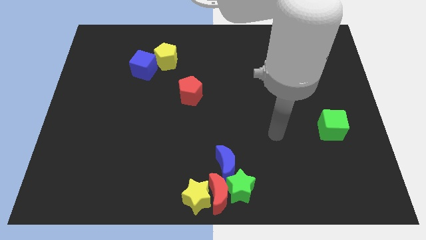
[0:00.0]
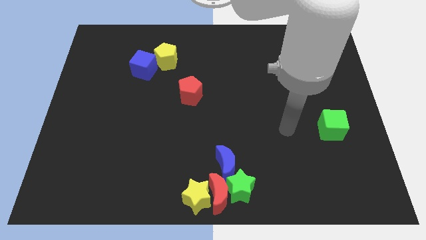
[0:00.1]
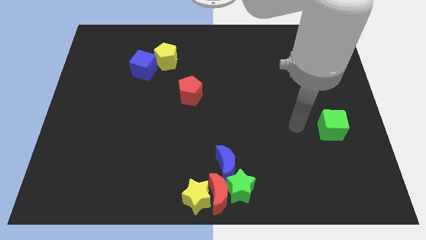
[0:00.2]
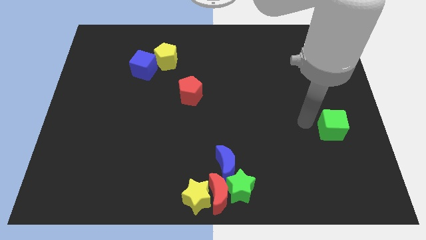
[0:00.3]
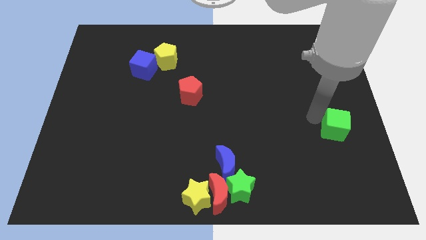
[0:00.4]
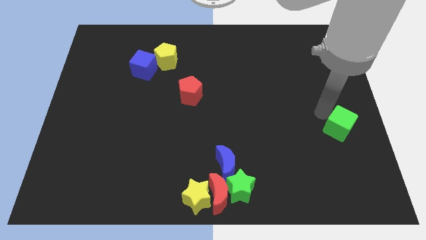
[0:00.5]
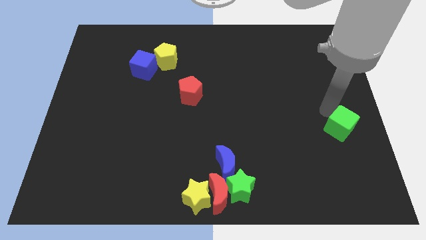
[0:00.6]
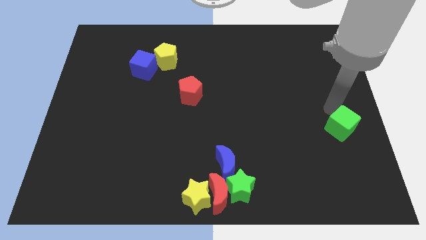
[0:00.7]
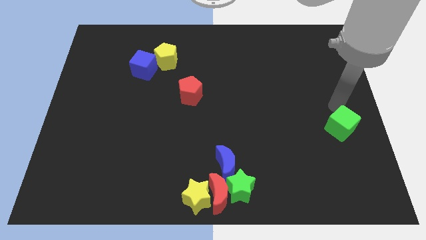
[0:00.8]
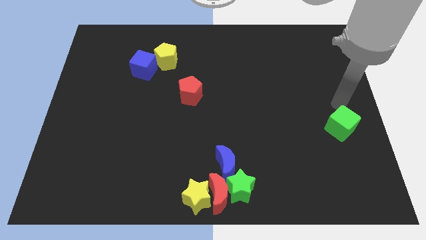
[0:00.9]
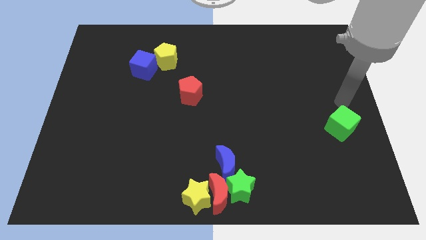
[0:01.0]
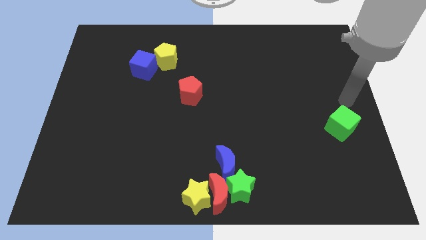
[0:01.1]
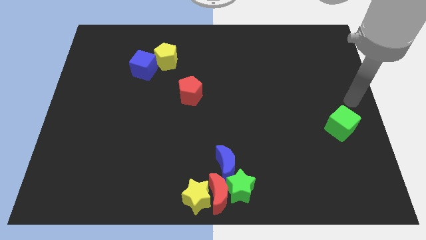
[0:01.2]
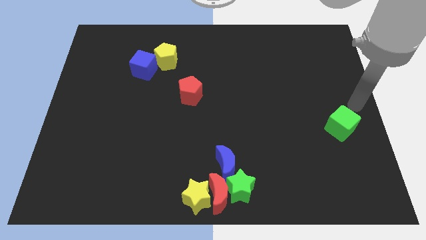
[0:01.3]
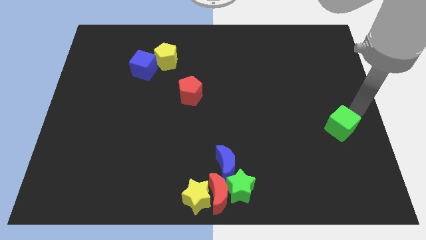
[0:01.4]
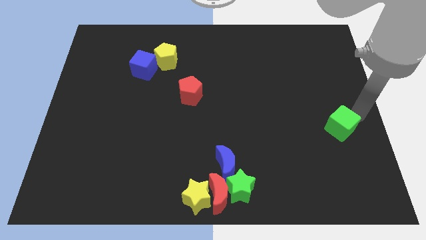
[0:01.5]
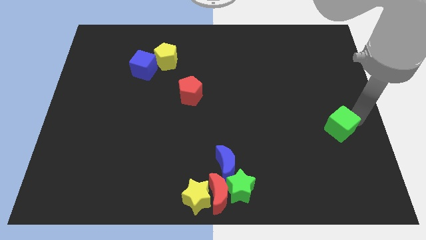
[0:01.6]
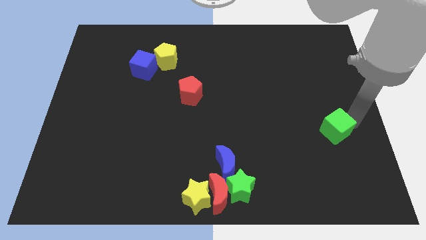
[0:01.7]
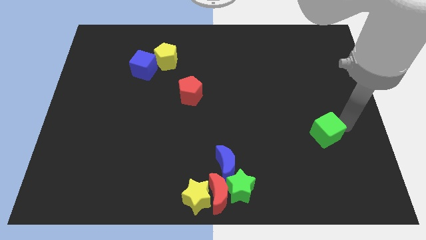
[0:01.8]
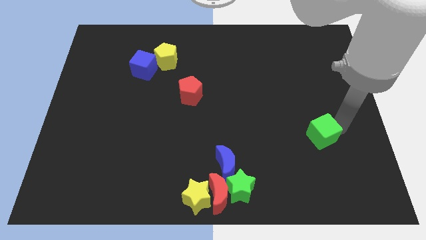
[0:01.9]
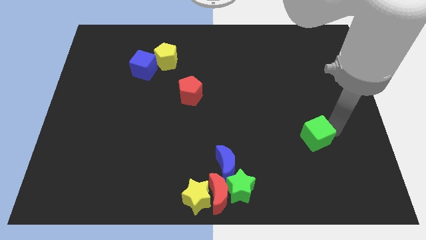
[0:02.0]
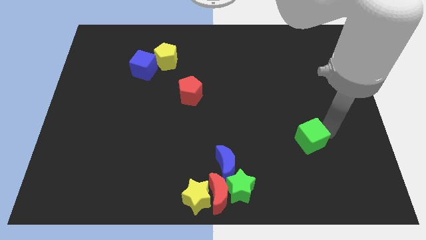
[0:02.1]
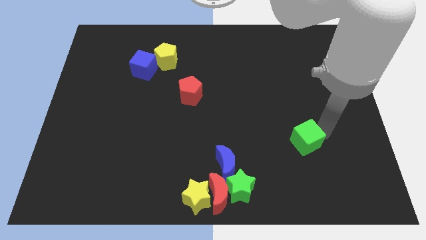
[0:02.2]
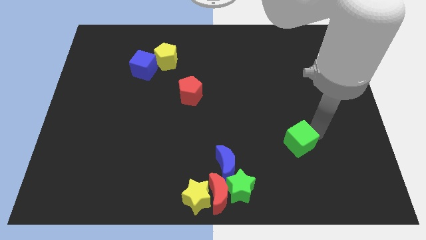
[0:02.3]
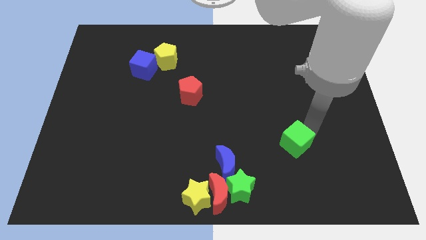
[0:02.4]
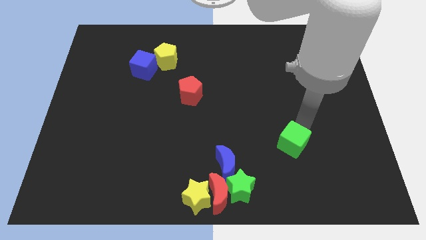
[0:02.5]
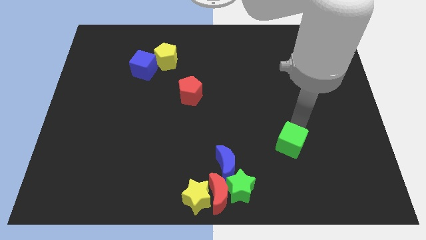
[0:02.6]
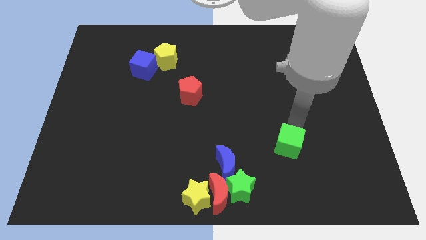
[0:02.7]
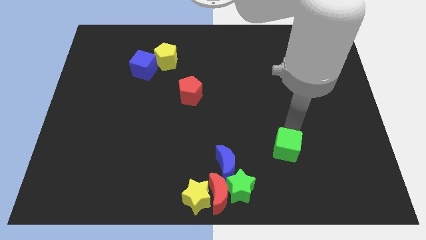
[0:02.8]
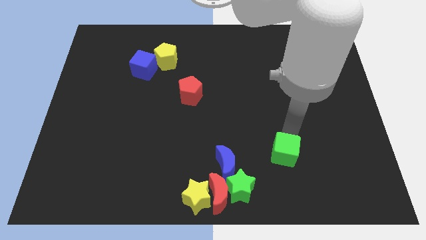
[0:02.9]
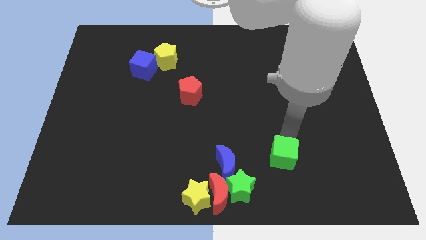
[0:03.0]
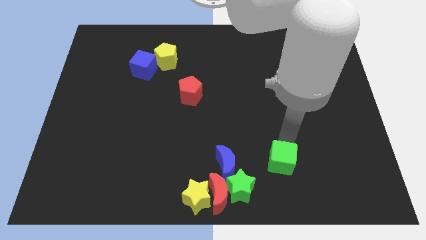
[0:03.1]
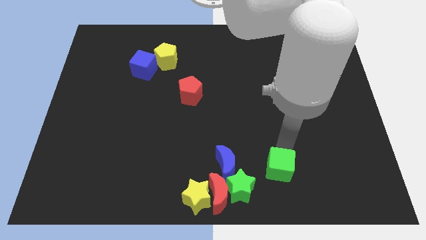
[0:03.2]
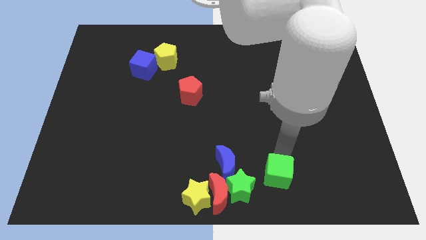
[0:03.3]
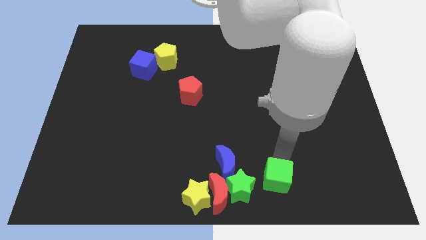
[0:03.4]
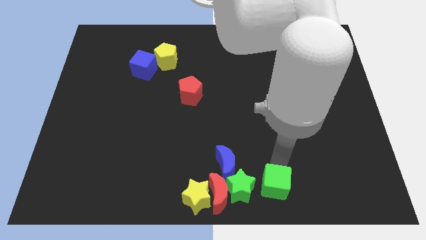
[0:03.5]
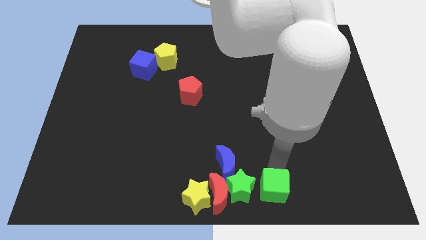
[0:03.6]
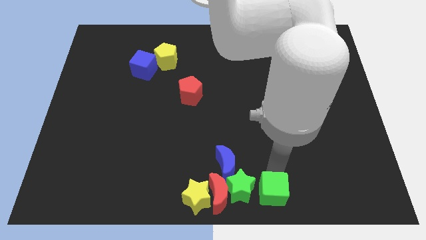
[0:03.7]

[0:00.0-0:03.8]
place the green cube to the right side of the green star

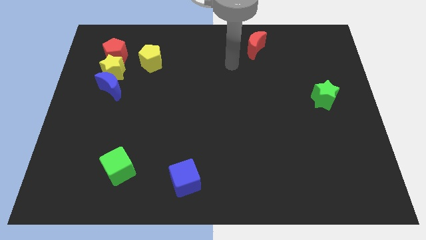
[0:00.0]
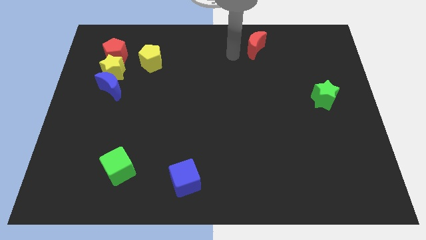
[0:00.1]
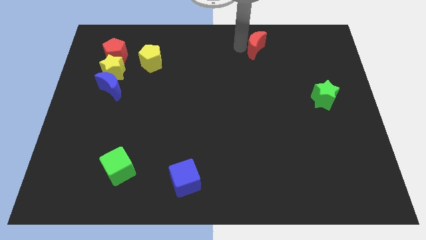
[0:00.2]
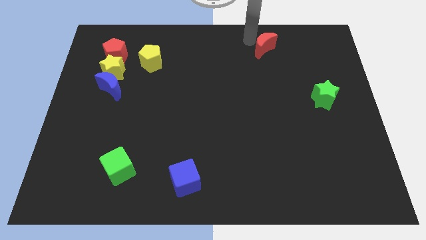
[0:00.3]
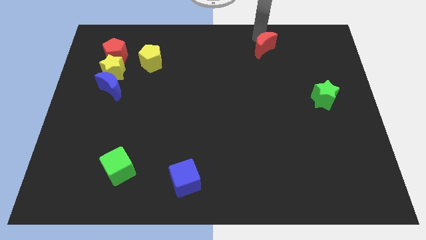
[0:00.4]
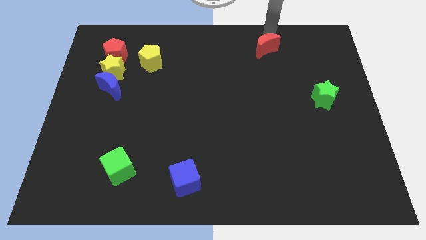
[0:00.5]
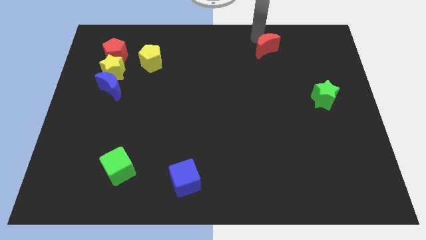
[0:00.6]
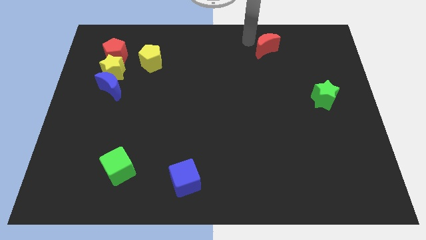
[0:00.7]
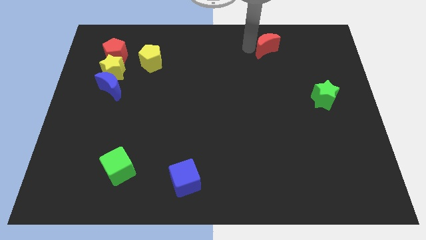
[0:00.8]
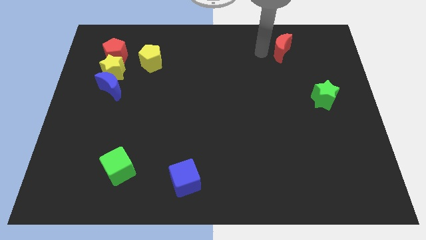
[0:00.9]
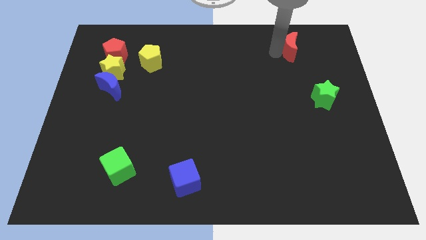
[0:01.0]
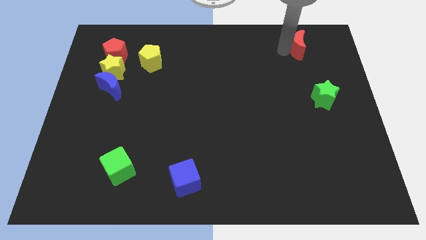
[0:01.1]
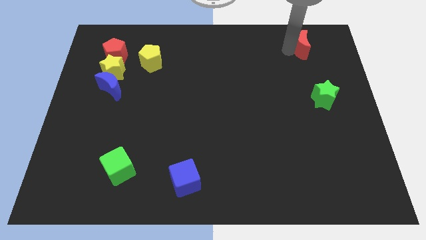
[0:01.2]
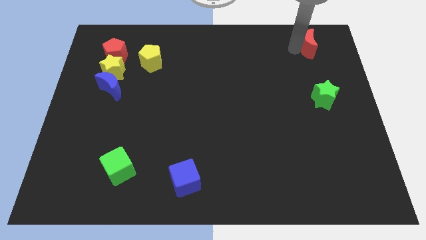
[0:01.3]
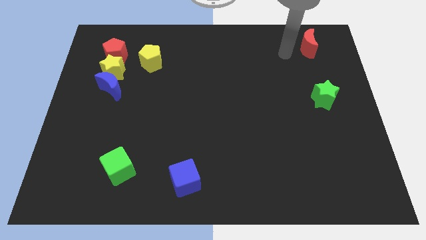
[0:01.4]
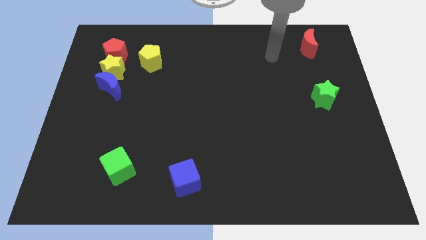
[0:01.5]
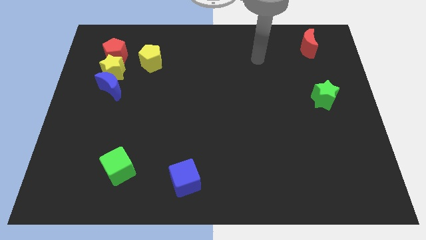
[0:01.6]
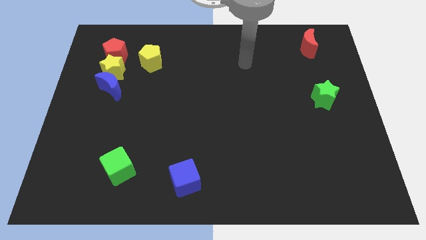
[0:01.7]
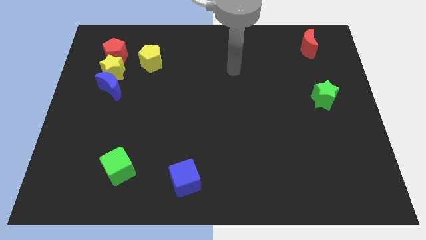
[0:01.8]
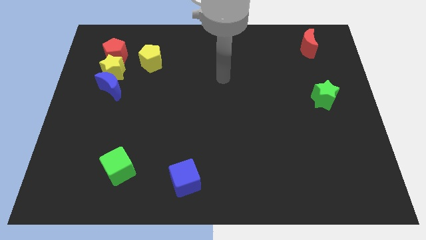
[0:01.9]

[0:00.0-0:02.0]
move the red crescent towards the top right of the board

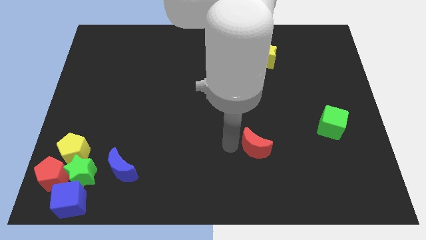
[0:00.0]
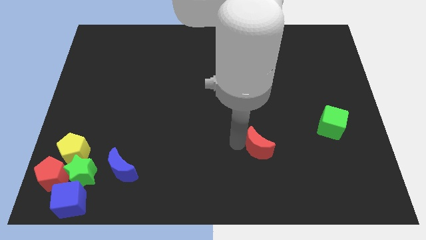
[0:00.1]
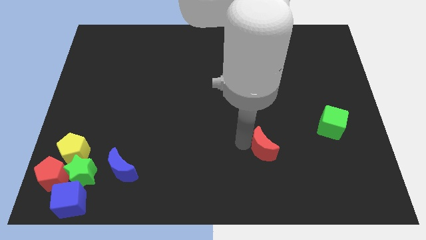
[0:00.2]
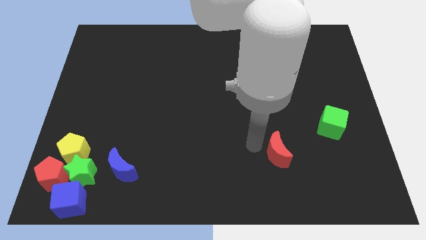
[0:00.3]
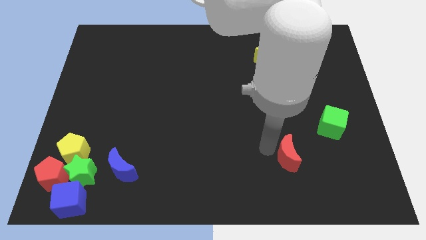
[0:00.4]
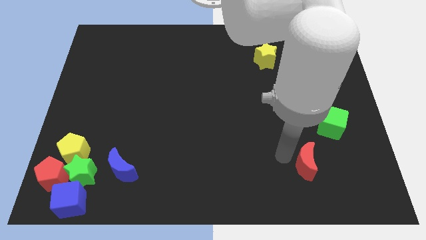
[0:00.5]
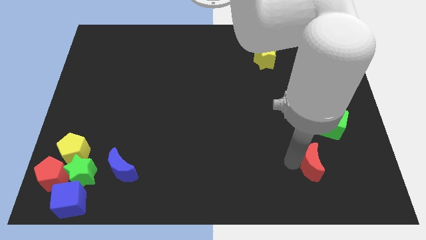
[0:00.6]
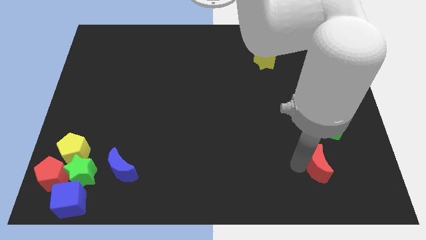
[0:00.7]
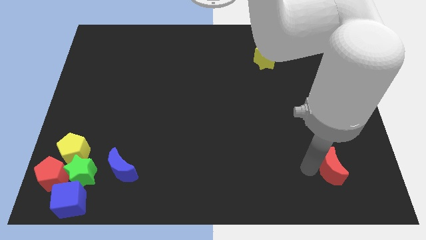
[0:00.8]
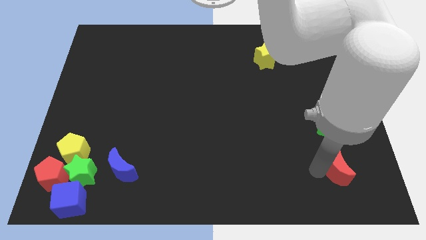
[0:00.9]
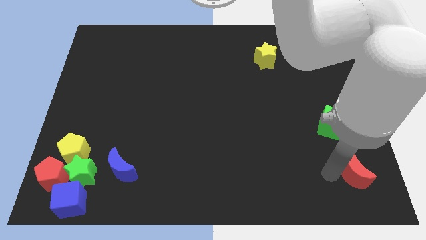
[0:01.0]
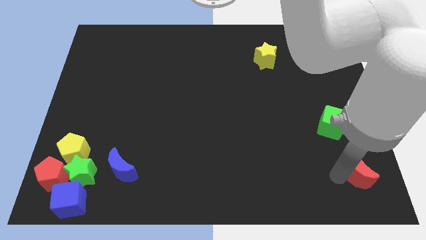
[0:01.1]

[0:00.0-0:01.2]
place red moon below green cube

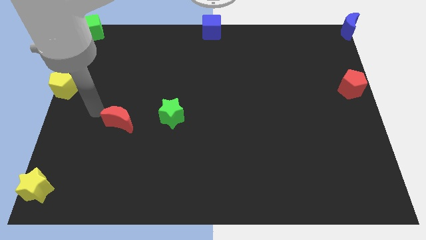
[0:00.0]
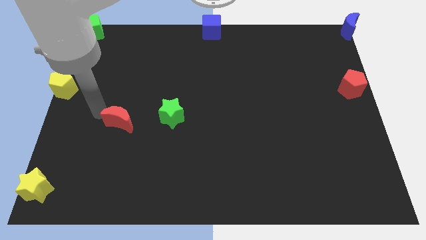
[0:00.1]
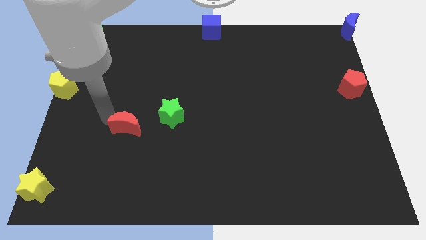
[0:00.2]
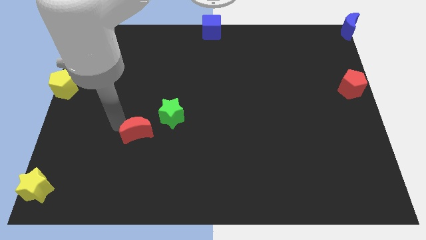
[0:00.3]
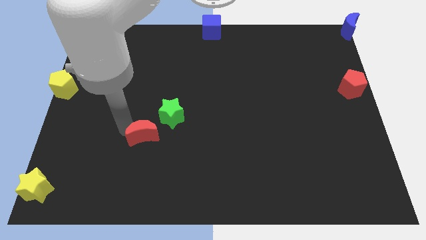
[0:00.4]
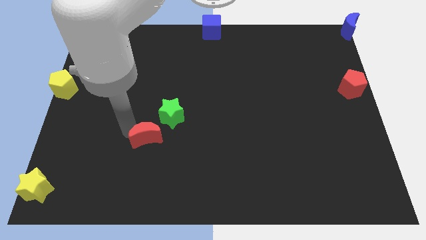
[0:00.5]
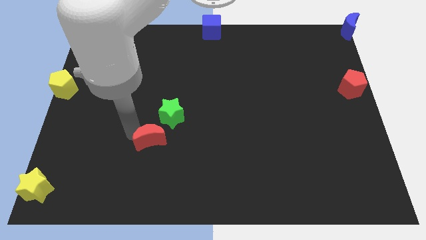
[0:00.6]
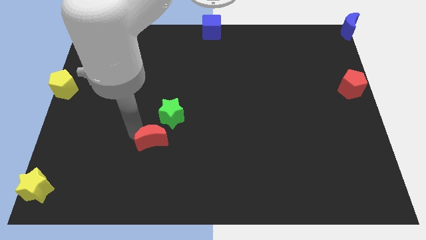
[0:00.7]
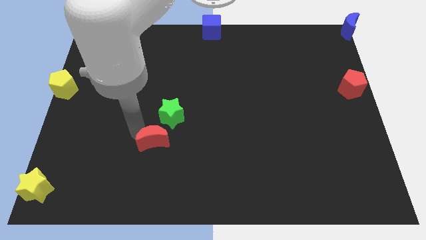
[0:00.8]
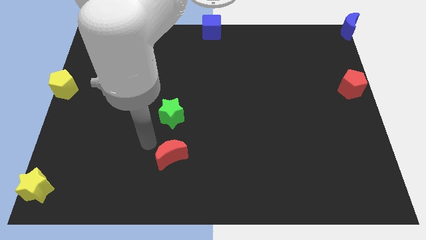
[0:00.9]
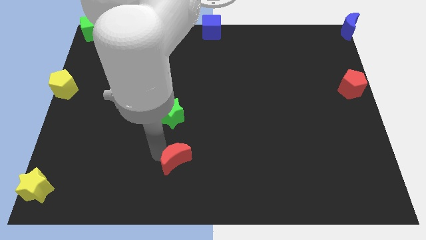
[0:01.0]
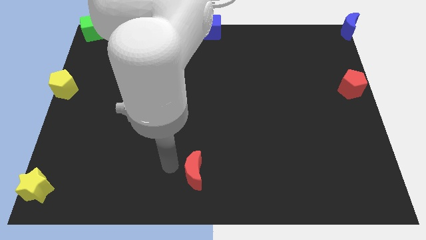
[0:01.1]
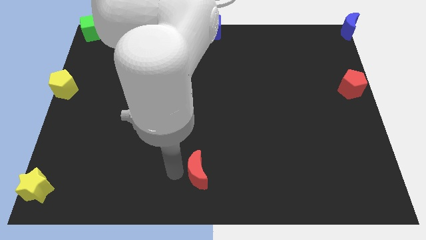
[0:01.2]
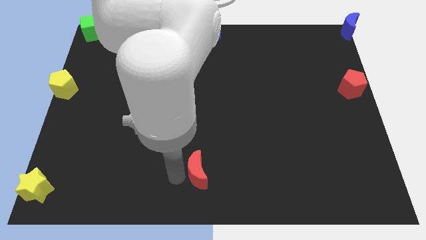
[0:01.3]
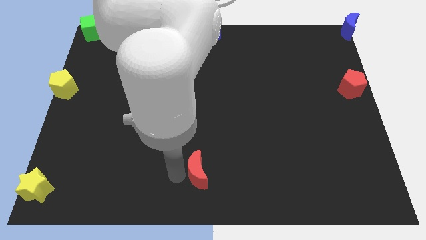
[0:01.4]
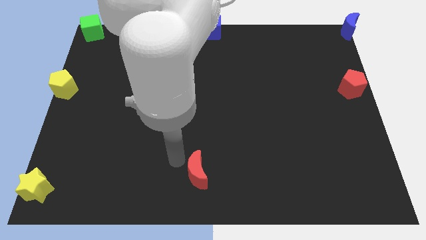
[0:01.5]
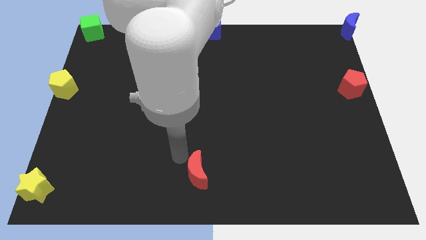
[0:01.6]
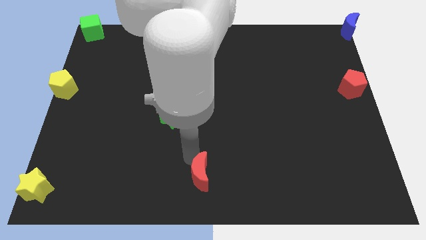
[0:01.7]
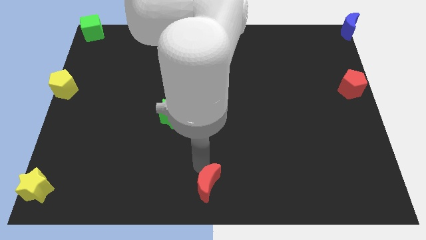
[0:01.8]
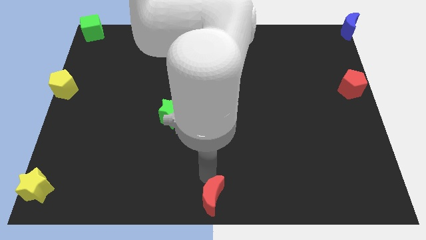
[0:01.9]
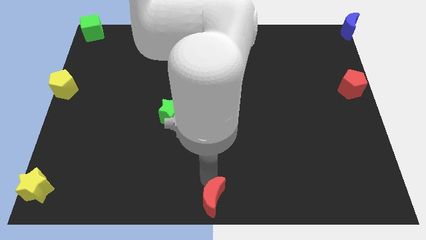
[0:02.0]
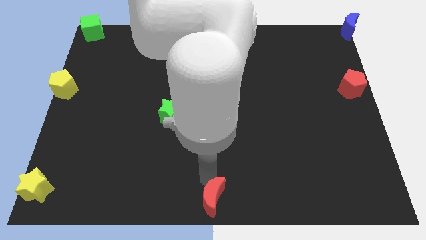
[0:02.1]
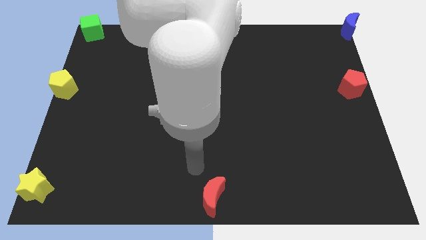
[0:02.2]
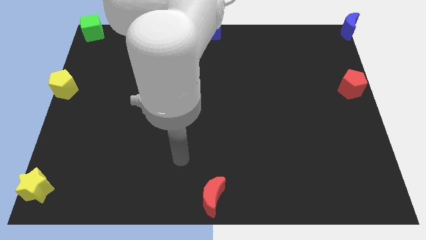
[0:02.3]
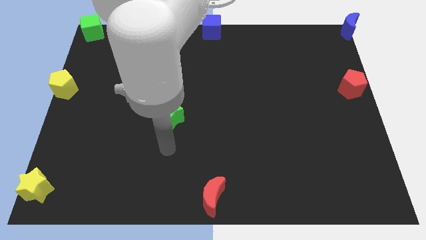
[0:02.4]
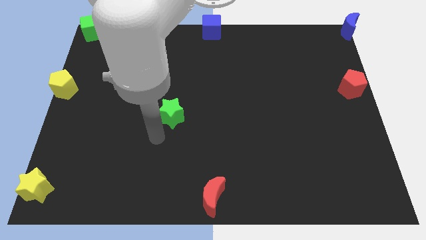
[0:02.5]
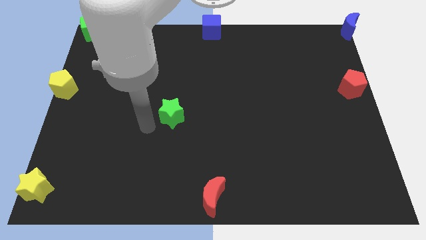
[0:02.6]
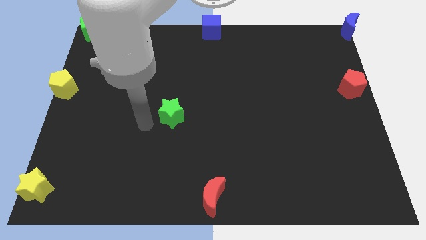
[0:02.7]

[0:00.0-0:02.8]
place the red crescent on middle bottom of the board
